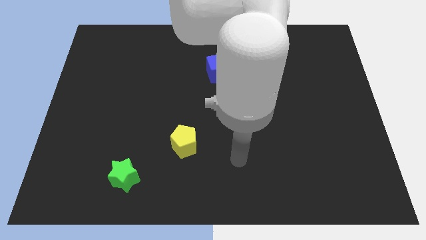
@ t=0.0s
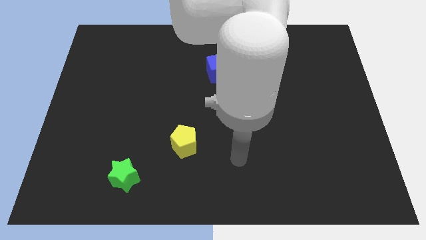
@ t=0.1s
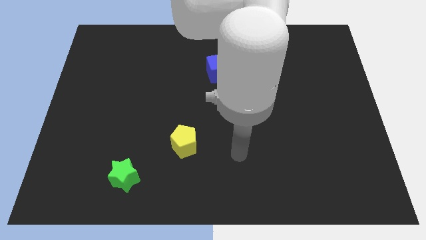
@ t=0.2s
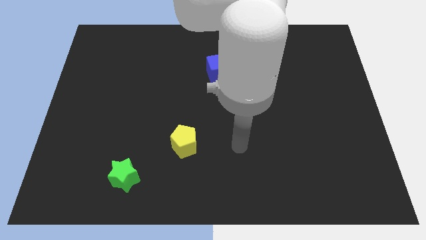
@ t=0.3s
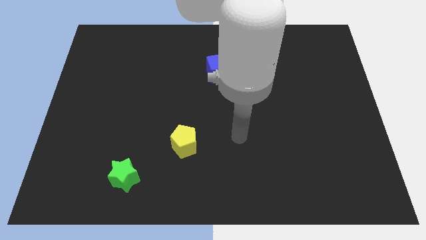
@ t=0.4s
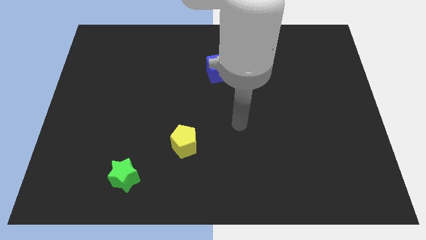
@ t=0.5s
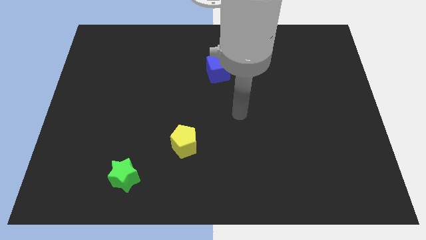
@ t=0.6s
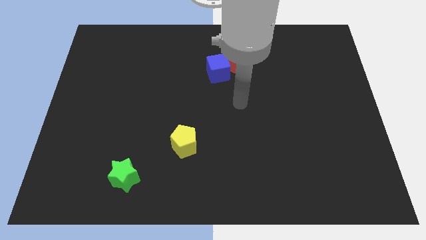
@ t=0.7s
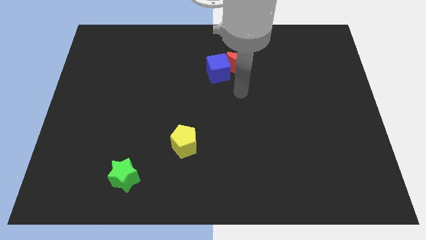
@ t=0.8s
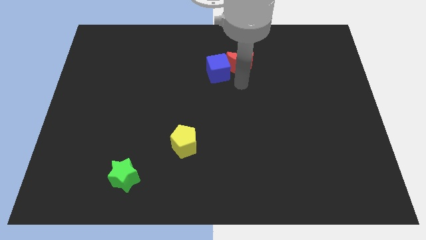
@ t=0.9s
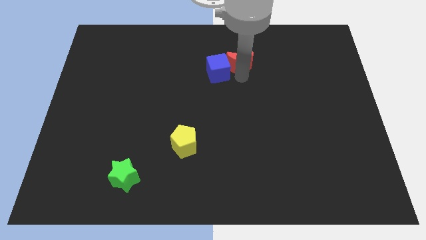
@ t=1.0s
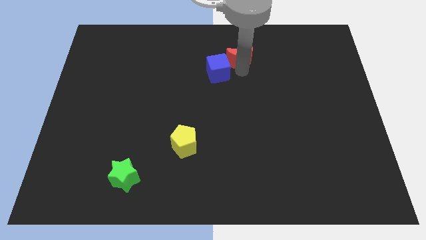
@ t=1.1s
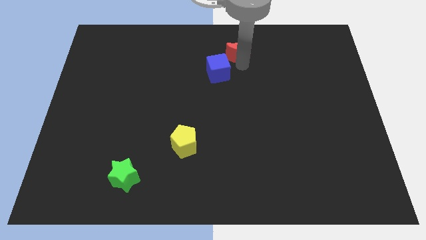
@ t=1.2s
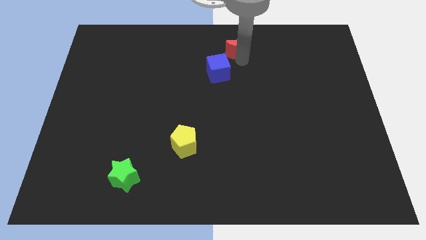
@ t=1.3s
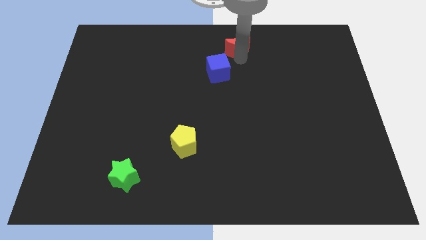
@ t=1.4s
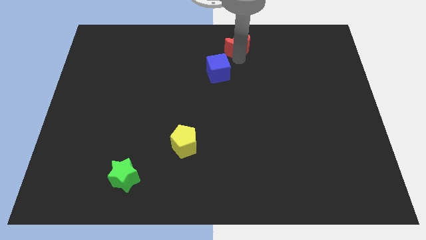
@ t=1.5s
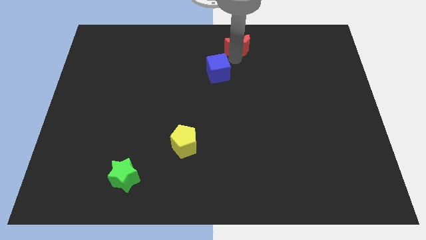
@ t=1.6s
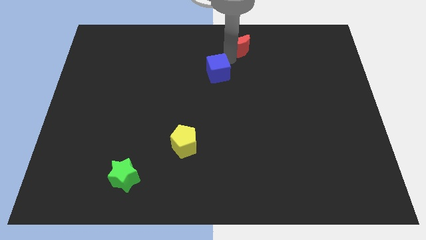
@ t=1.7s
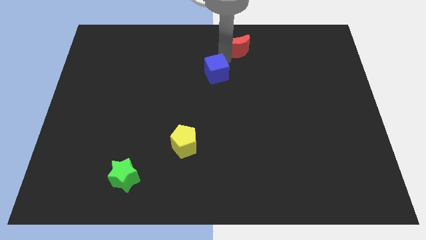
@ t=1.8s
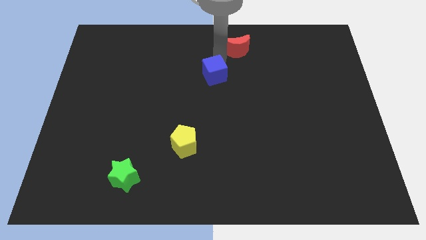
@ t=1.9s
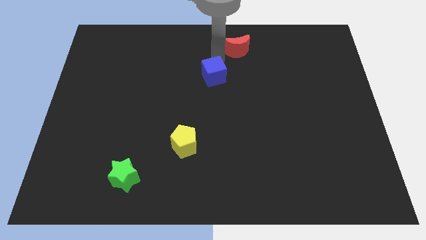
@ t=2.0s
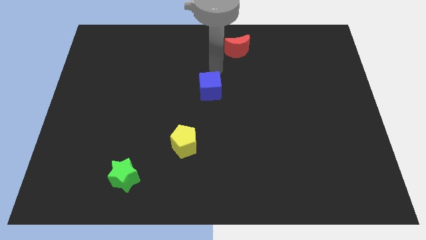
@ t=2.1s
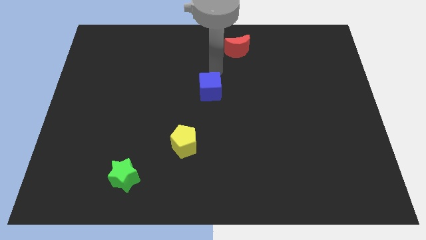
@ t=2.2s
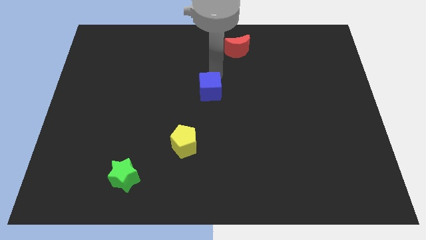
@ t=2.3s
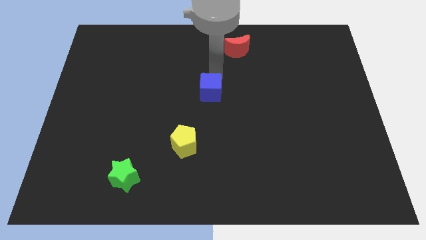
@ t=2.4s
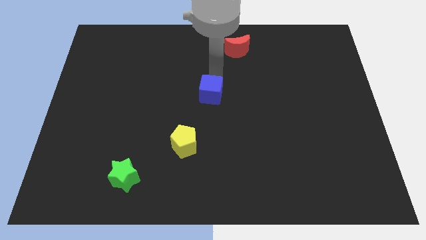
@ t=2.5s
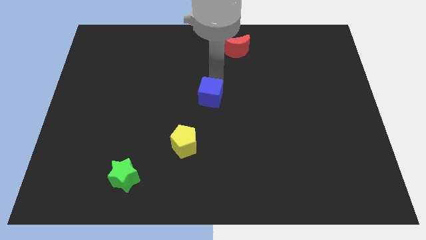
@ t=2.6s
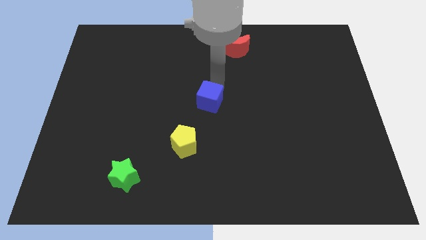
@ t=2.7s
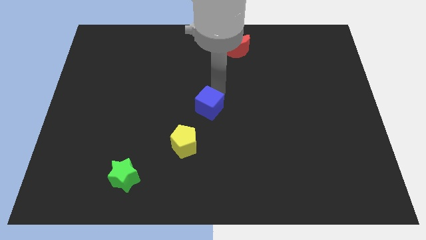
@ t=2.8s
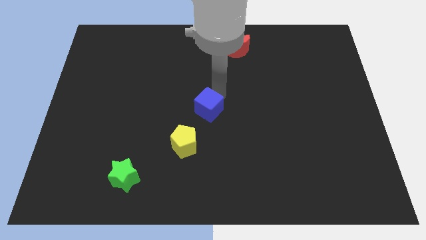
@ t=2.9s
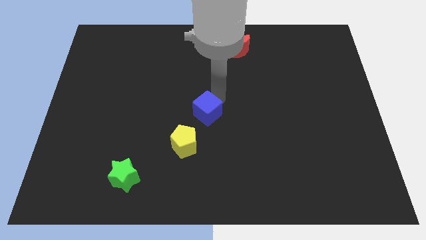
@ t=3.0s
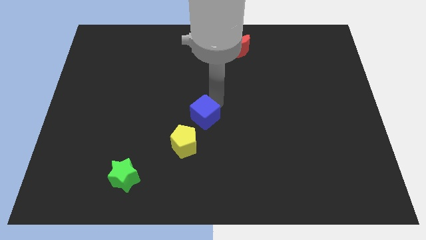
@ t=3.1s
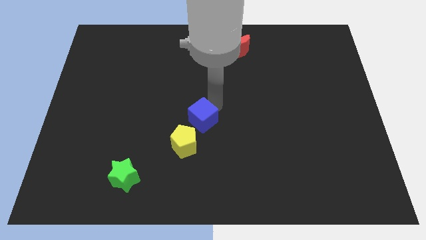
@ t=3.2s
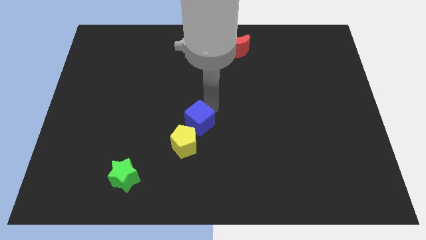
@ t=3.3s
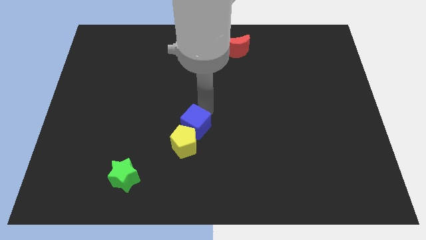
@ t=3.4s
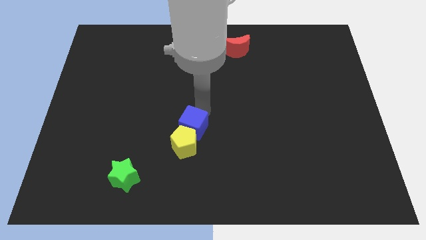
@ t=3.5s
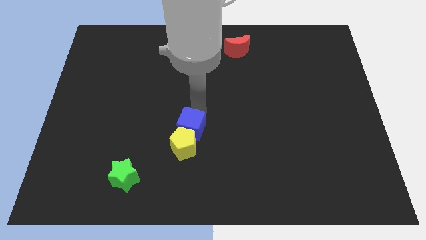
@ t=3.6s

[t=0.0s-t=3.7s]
push the blue cube close to the yellow block

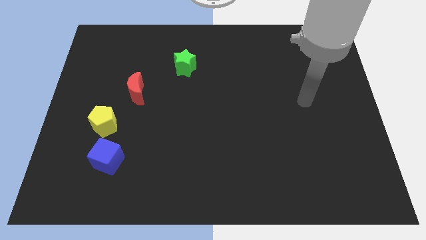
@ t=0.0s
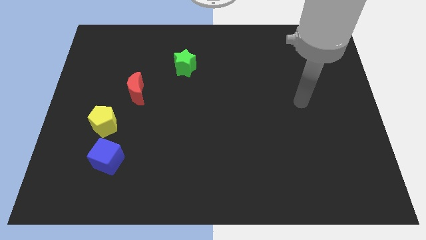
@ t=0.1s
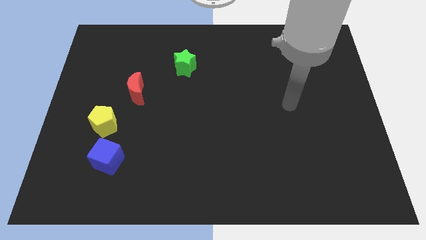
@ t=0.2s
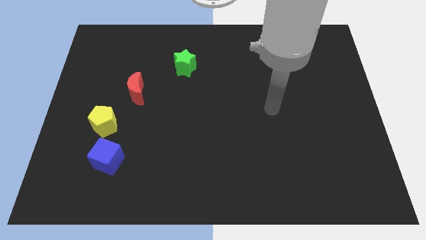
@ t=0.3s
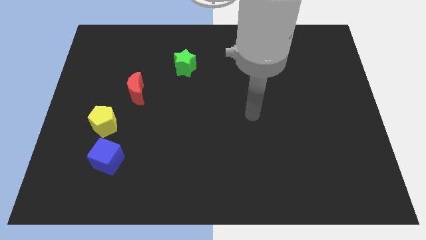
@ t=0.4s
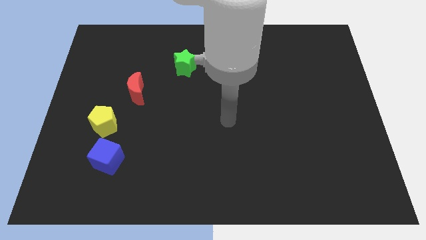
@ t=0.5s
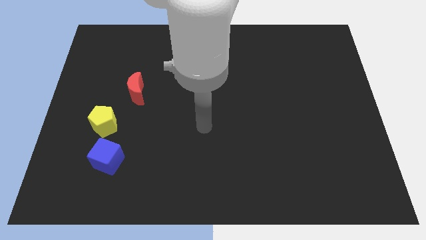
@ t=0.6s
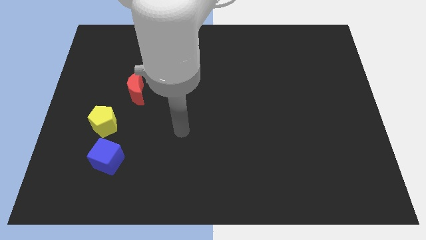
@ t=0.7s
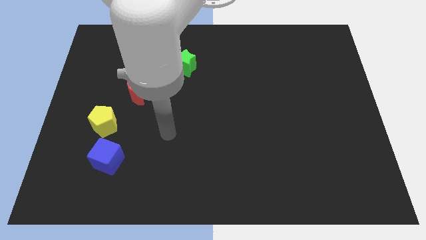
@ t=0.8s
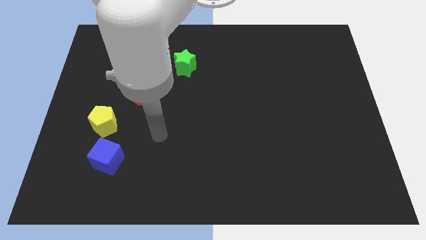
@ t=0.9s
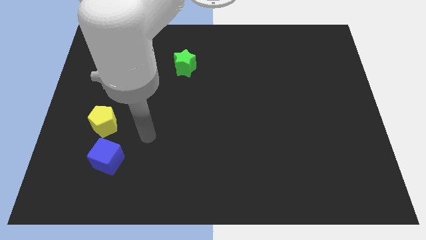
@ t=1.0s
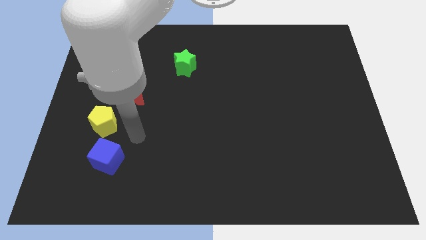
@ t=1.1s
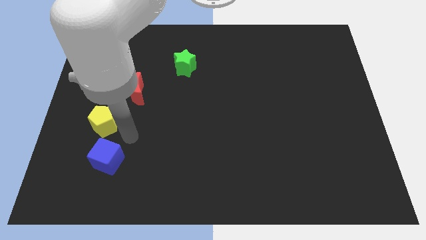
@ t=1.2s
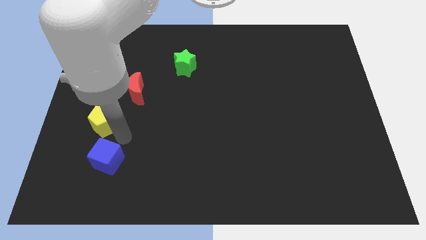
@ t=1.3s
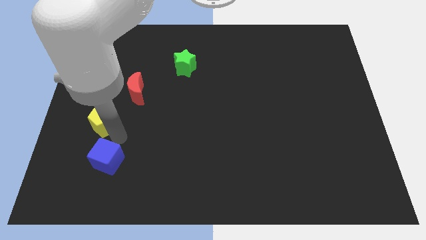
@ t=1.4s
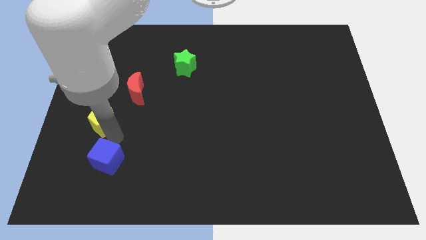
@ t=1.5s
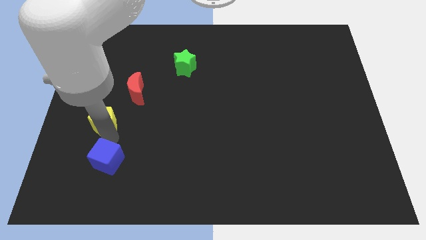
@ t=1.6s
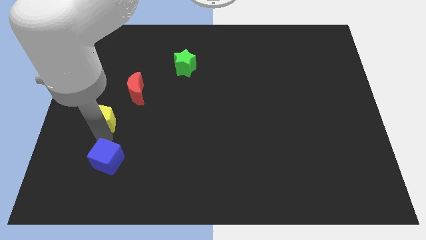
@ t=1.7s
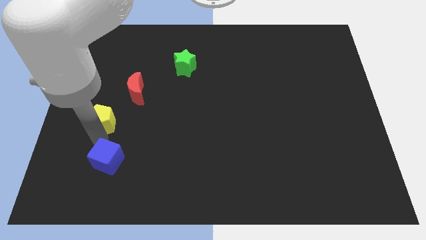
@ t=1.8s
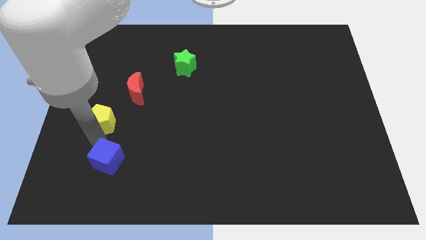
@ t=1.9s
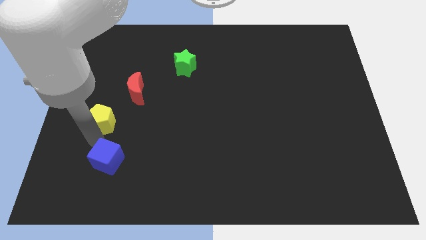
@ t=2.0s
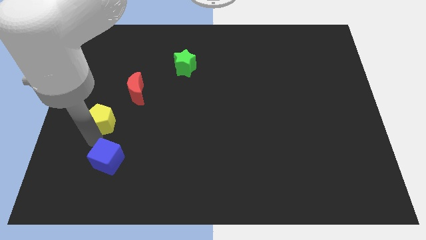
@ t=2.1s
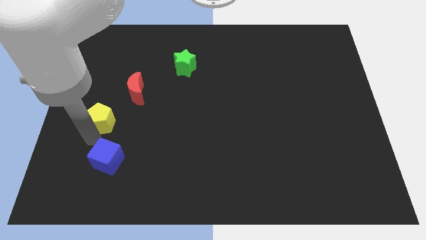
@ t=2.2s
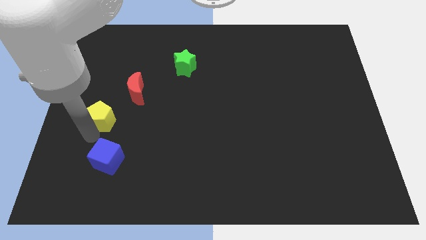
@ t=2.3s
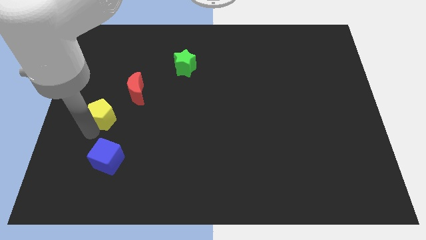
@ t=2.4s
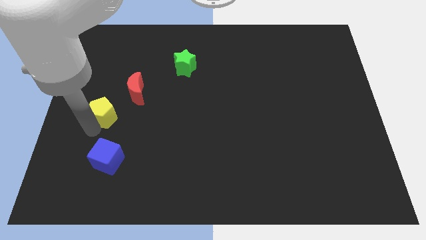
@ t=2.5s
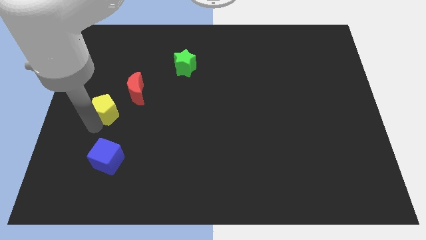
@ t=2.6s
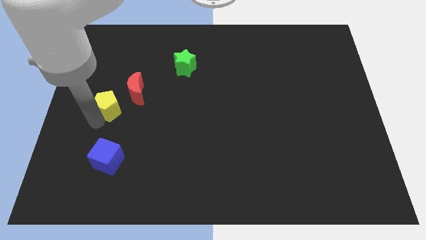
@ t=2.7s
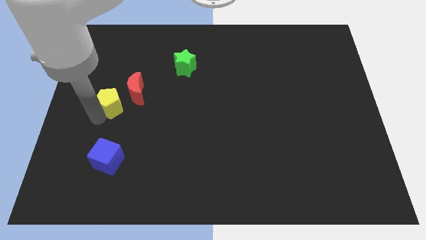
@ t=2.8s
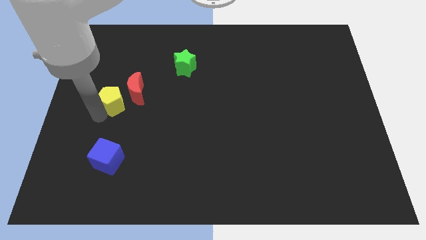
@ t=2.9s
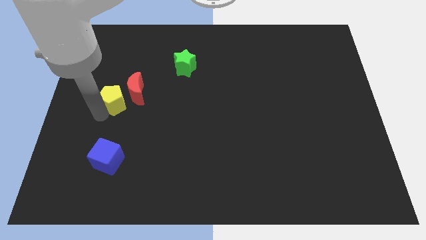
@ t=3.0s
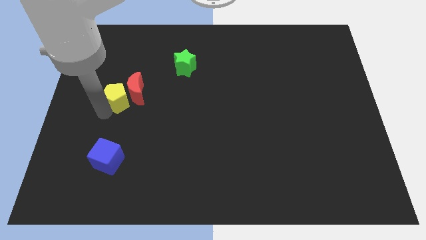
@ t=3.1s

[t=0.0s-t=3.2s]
move the yellow pentagon towards the red block

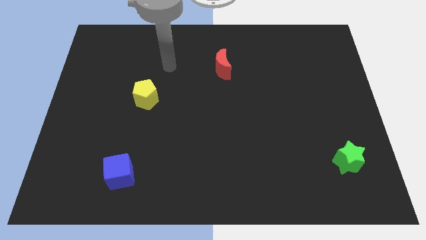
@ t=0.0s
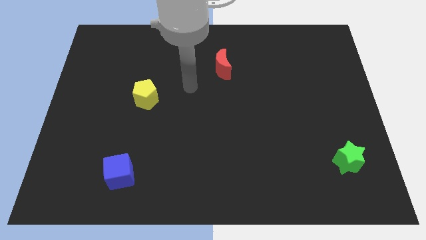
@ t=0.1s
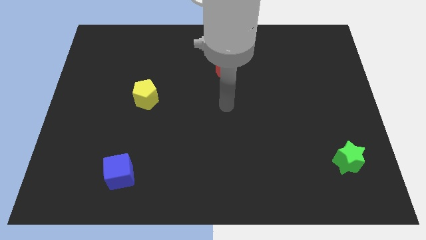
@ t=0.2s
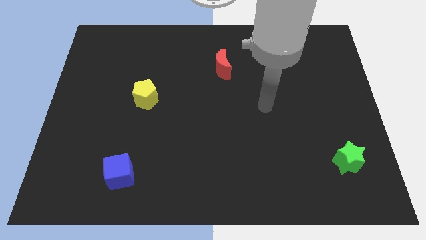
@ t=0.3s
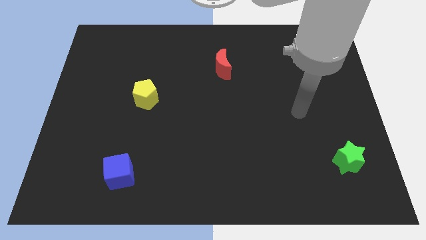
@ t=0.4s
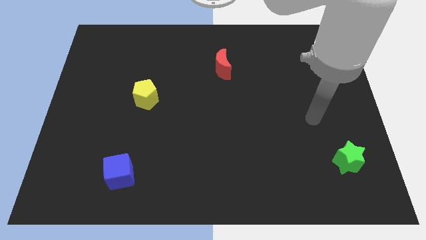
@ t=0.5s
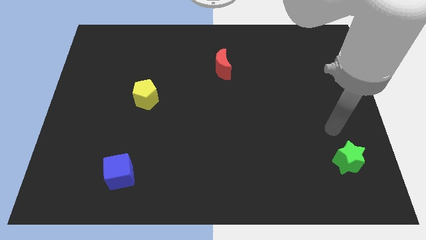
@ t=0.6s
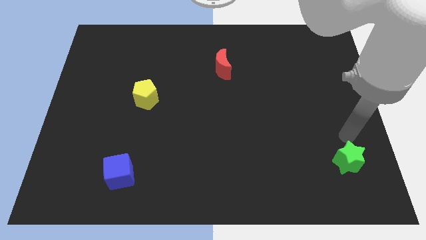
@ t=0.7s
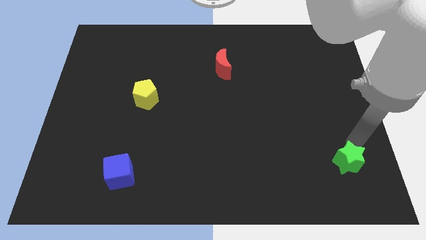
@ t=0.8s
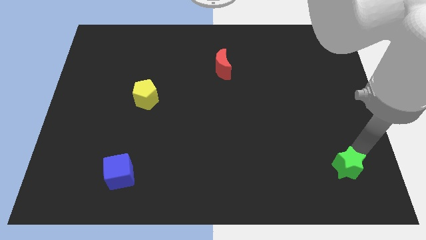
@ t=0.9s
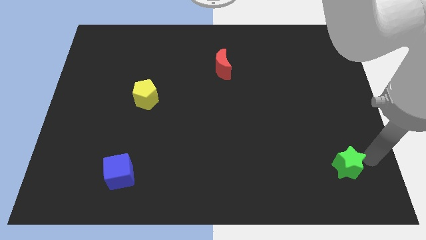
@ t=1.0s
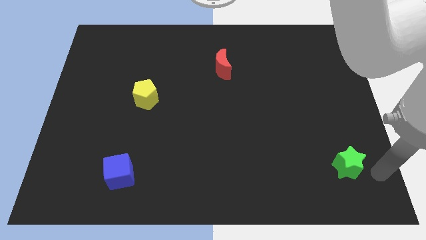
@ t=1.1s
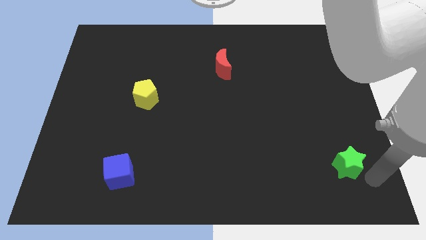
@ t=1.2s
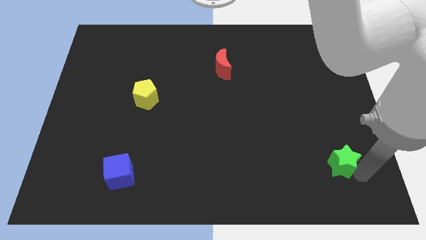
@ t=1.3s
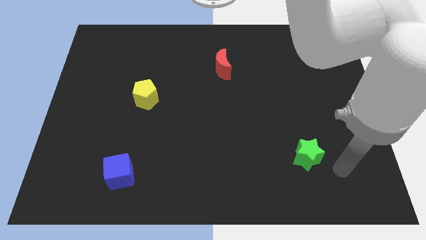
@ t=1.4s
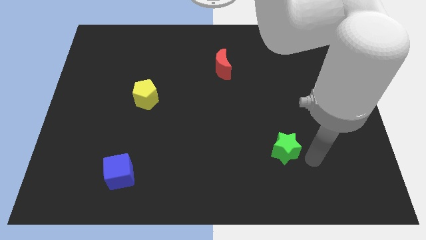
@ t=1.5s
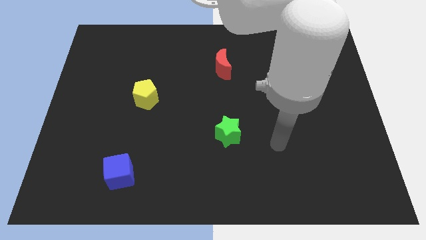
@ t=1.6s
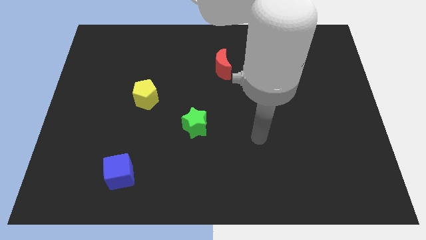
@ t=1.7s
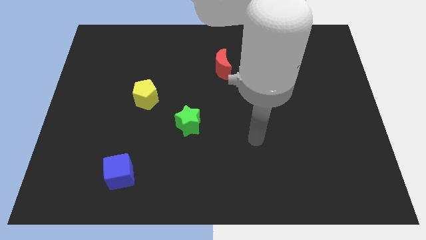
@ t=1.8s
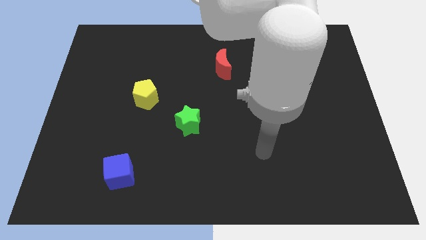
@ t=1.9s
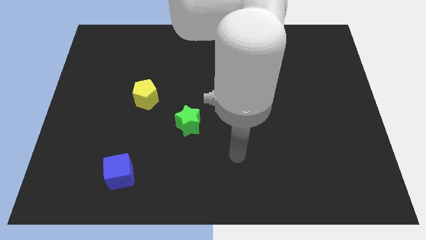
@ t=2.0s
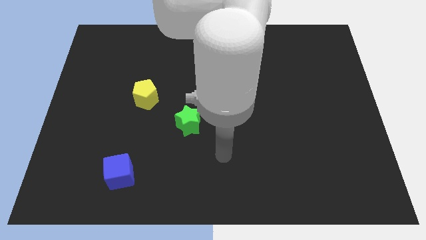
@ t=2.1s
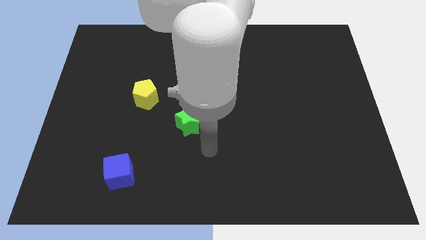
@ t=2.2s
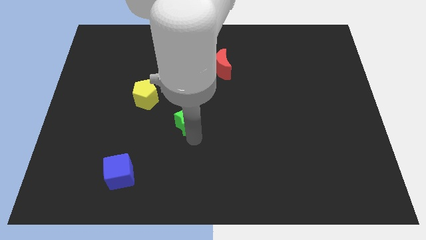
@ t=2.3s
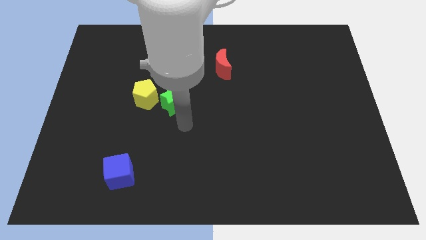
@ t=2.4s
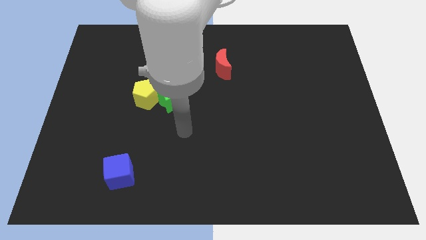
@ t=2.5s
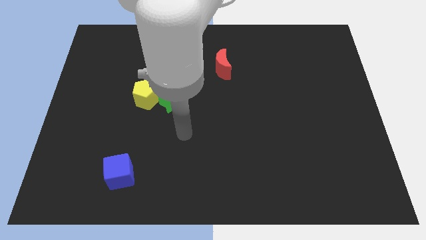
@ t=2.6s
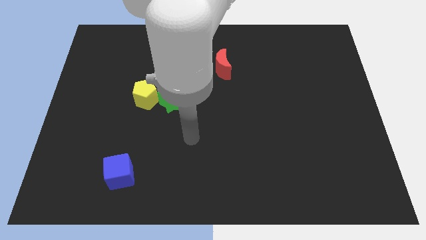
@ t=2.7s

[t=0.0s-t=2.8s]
push the green star close to the yellow pentagon
